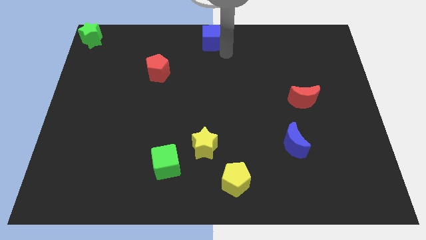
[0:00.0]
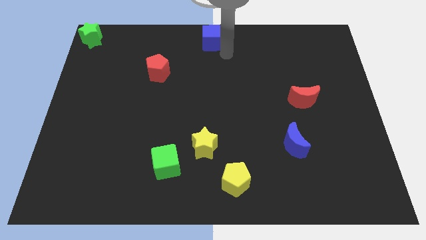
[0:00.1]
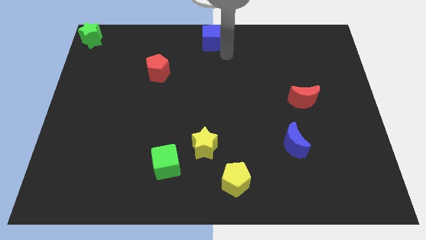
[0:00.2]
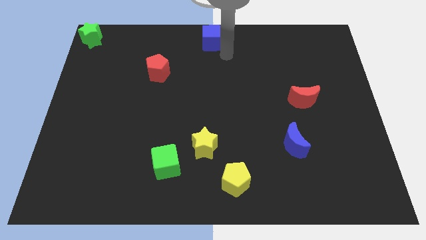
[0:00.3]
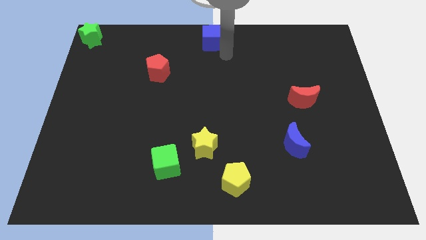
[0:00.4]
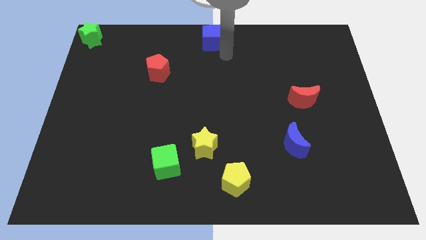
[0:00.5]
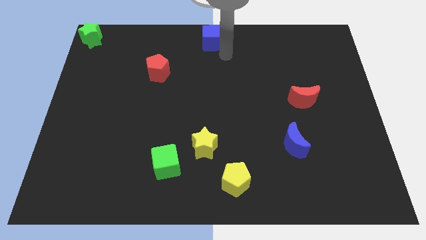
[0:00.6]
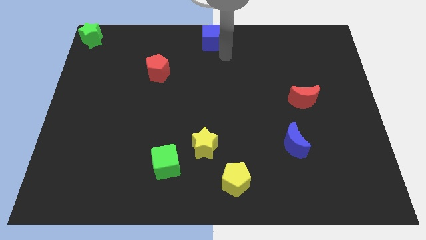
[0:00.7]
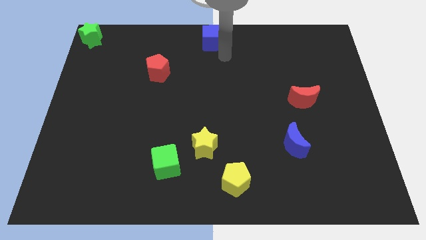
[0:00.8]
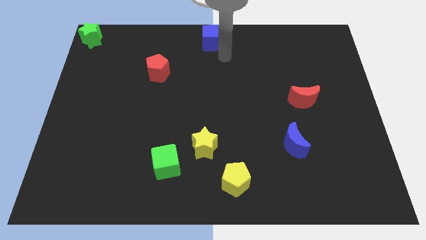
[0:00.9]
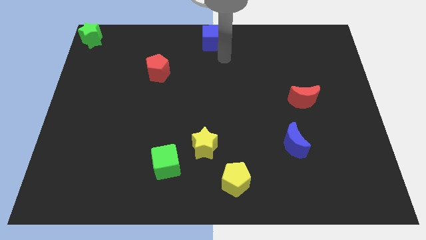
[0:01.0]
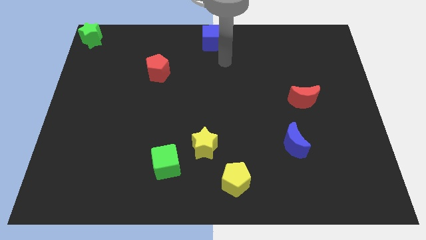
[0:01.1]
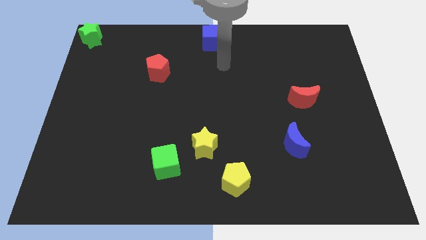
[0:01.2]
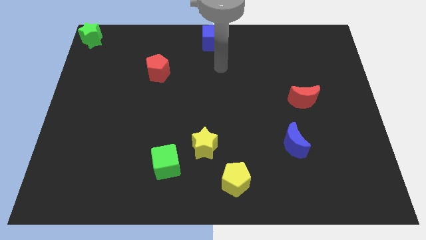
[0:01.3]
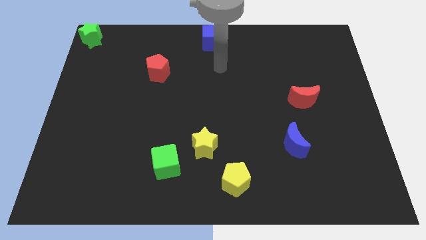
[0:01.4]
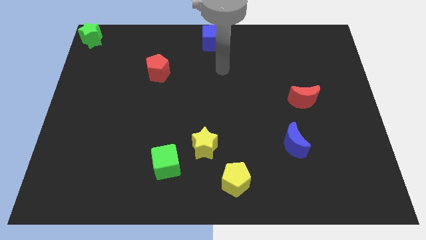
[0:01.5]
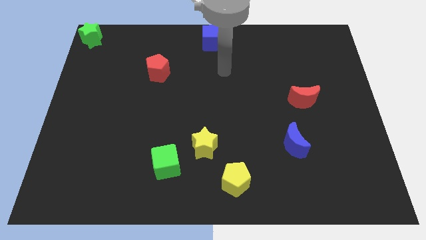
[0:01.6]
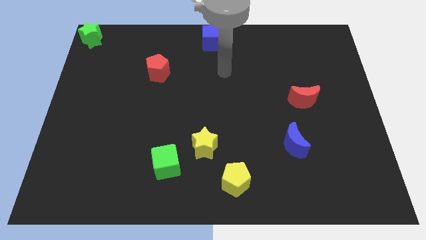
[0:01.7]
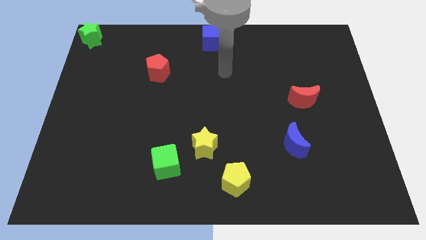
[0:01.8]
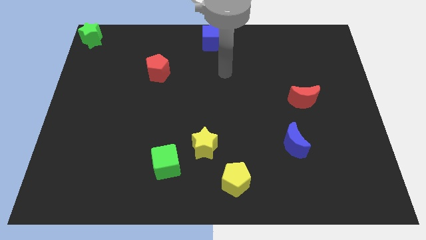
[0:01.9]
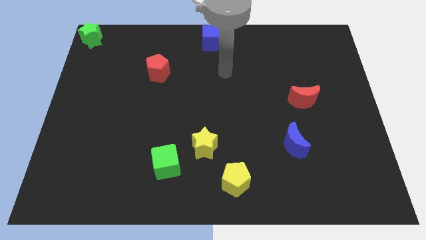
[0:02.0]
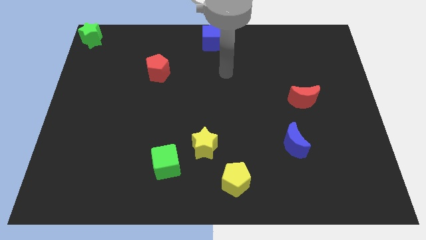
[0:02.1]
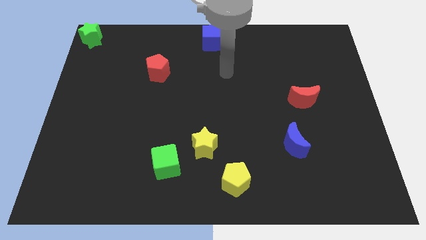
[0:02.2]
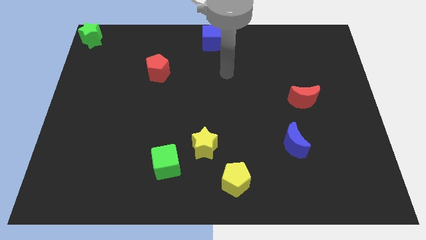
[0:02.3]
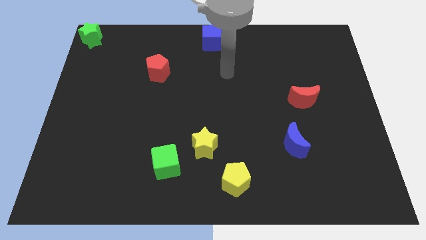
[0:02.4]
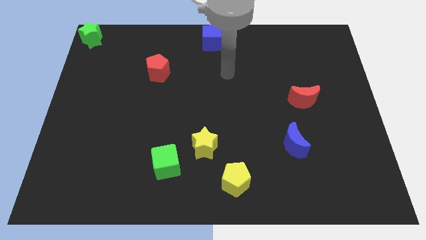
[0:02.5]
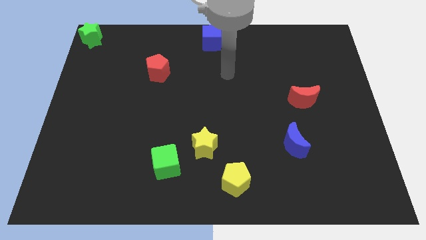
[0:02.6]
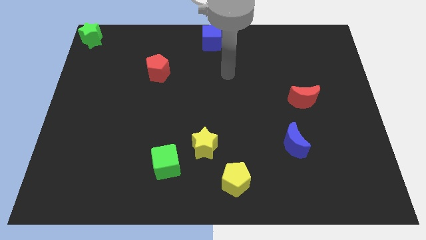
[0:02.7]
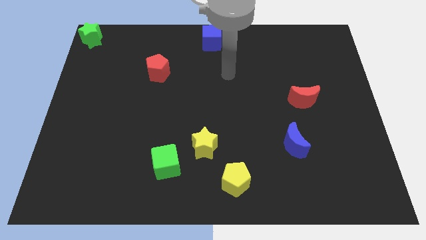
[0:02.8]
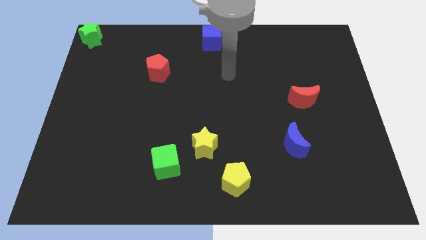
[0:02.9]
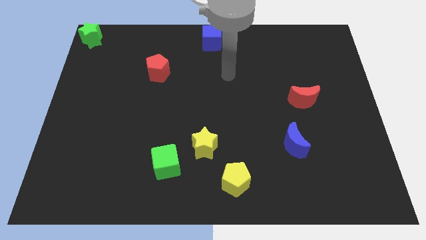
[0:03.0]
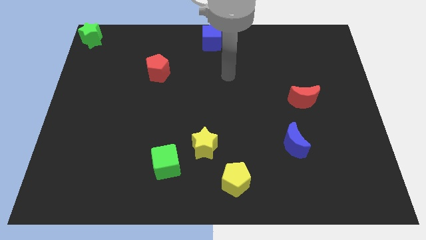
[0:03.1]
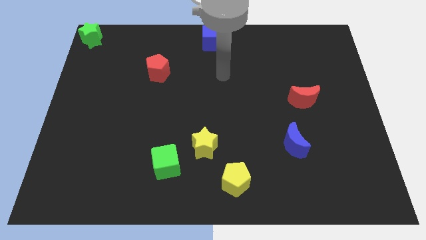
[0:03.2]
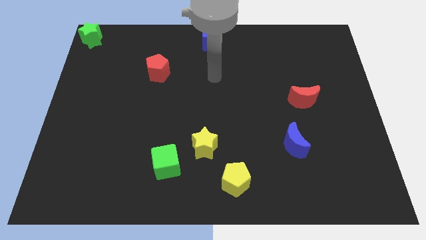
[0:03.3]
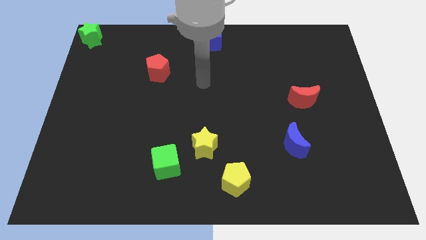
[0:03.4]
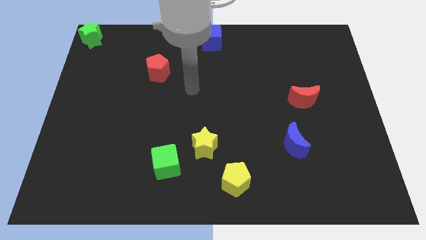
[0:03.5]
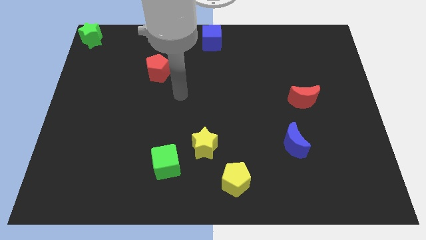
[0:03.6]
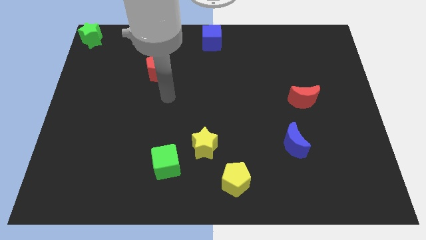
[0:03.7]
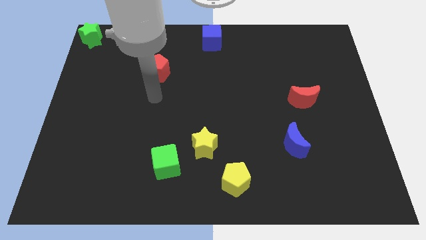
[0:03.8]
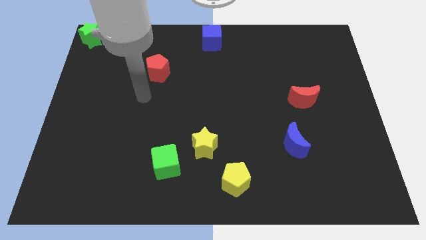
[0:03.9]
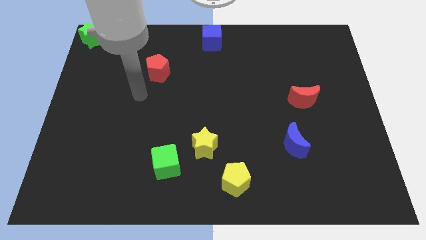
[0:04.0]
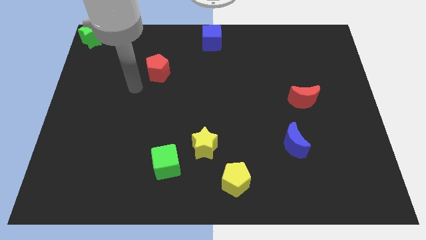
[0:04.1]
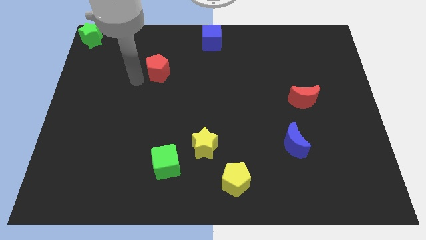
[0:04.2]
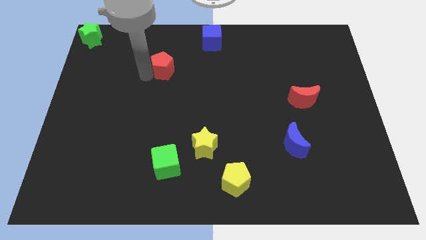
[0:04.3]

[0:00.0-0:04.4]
move the arm towards the red pentagon

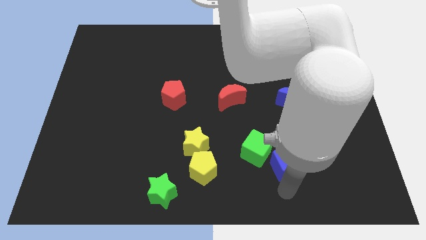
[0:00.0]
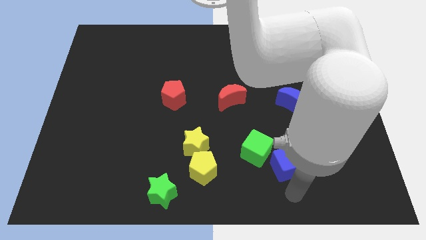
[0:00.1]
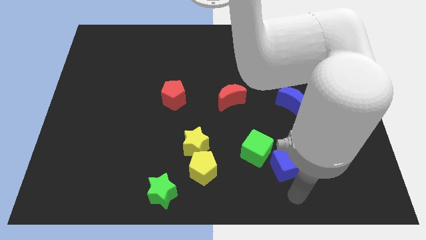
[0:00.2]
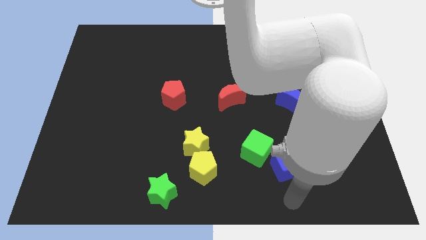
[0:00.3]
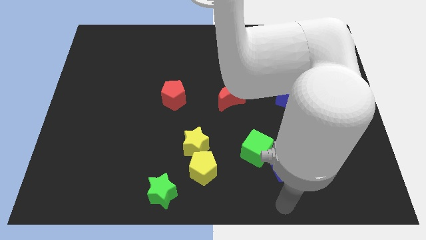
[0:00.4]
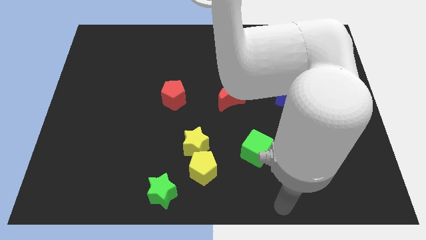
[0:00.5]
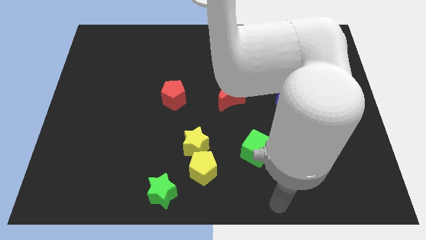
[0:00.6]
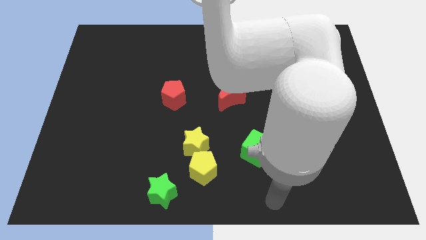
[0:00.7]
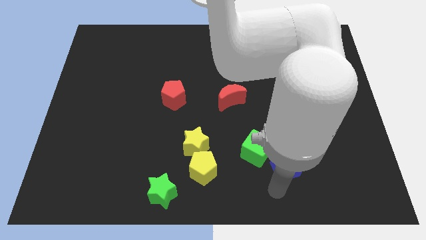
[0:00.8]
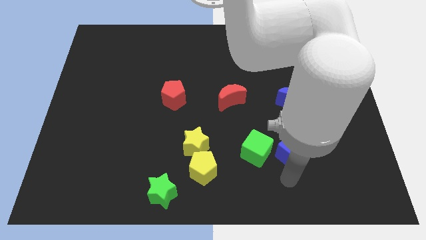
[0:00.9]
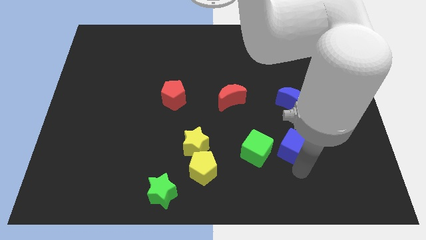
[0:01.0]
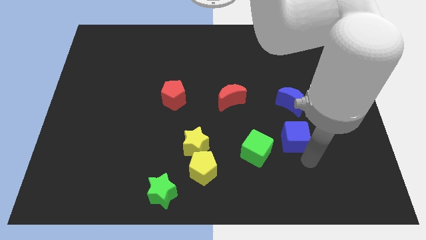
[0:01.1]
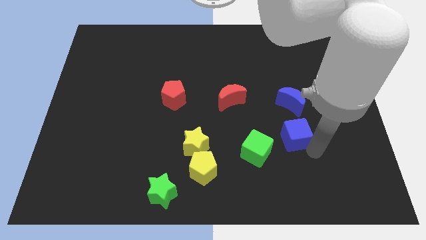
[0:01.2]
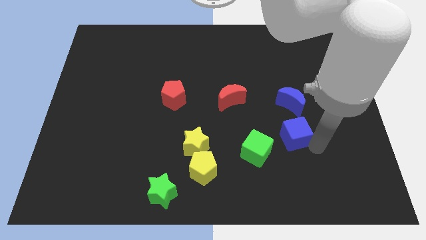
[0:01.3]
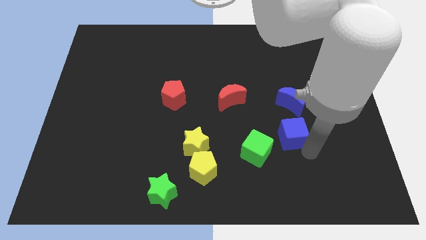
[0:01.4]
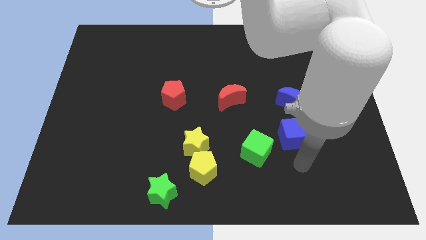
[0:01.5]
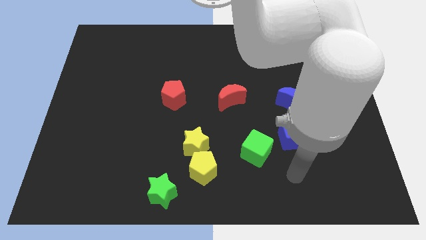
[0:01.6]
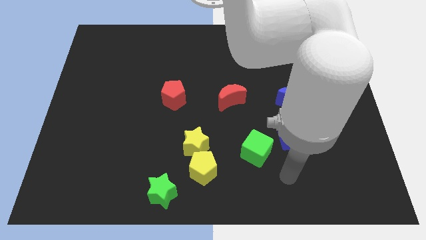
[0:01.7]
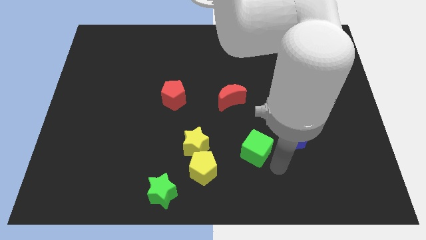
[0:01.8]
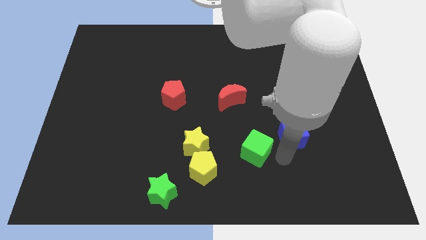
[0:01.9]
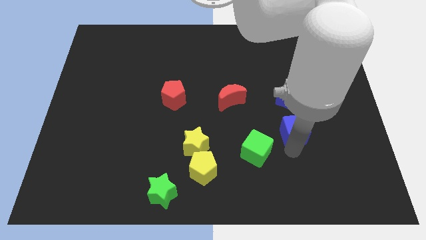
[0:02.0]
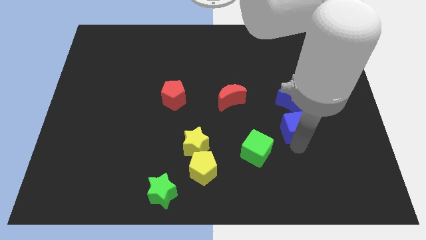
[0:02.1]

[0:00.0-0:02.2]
separate blue cube from green cube

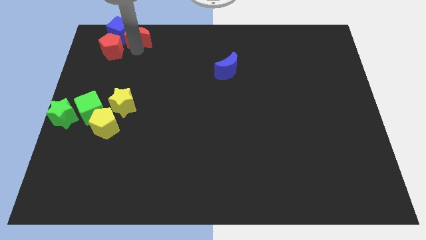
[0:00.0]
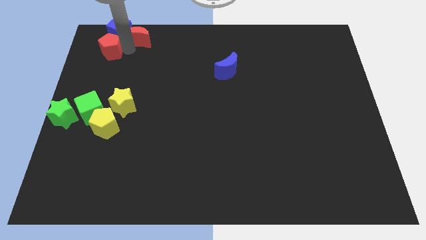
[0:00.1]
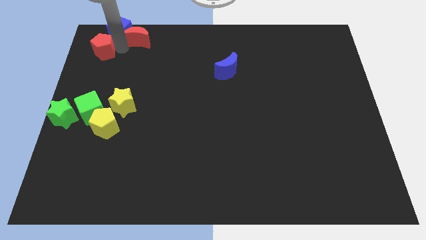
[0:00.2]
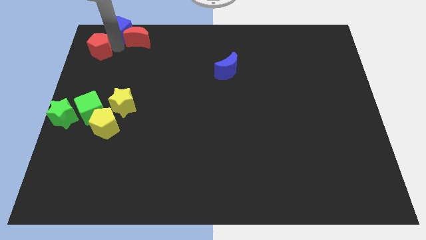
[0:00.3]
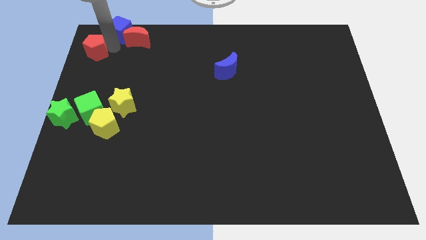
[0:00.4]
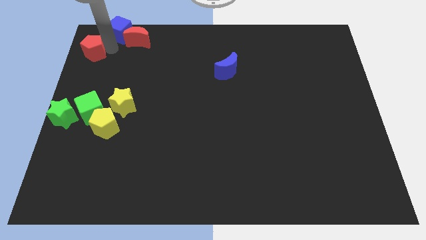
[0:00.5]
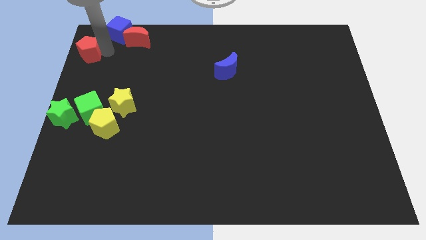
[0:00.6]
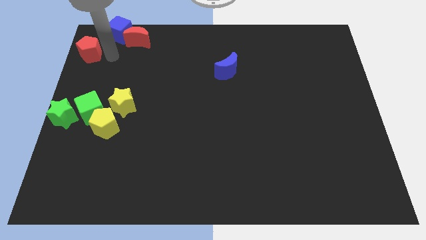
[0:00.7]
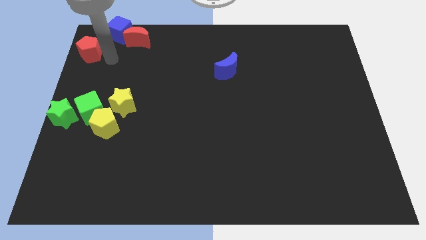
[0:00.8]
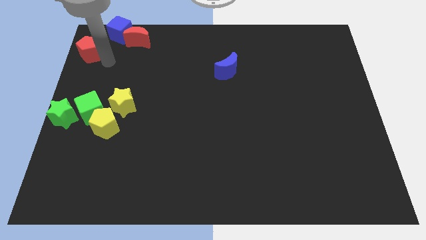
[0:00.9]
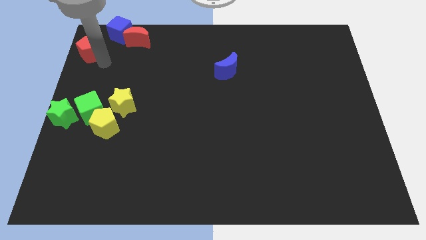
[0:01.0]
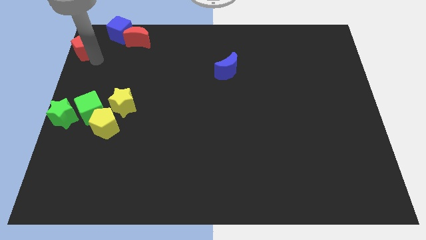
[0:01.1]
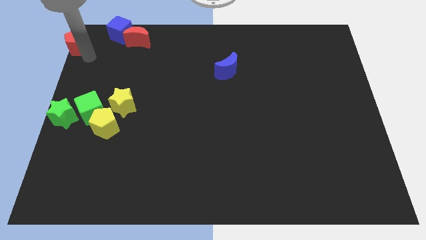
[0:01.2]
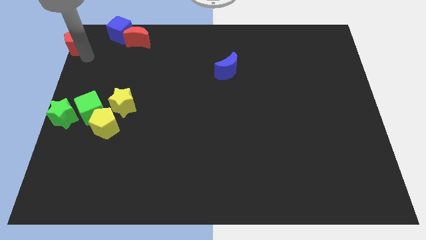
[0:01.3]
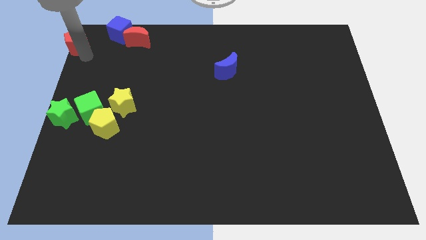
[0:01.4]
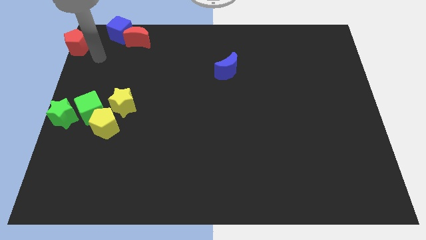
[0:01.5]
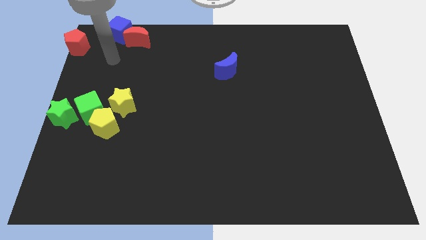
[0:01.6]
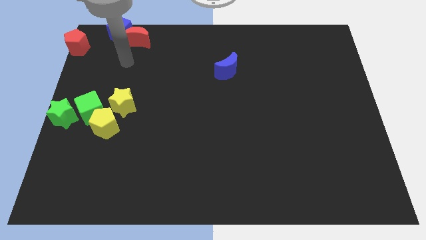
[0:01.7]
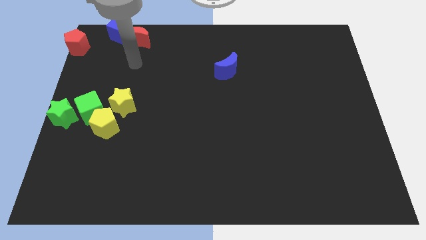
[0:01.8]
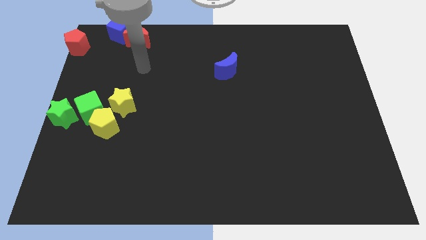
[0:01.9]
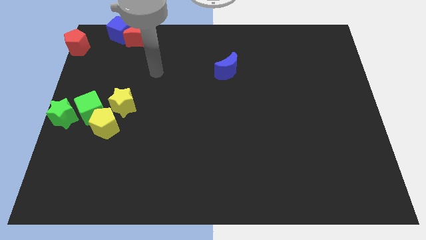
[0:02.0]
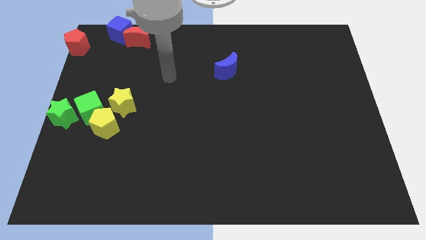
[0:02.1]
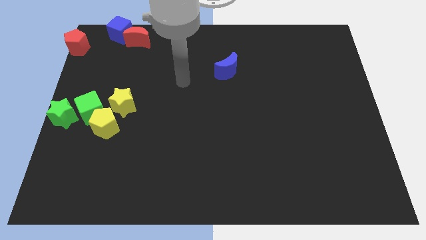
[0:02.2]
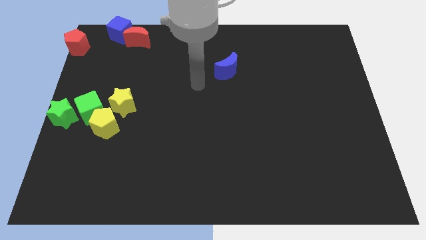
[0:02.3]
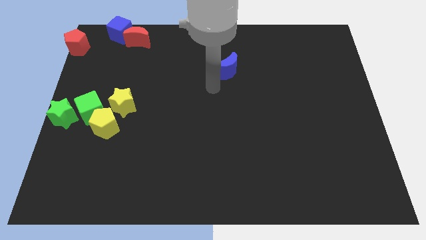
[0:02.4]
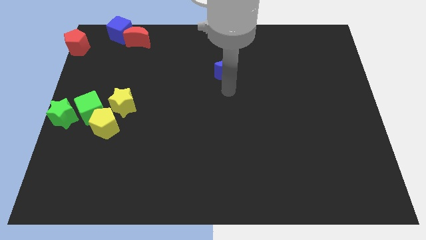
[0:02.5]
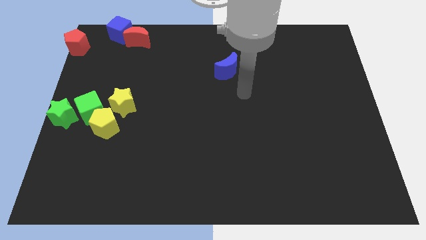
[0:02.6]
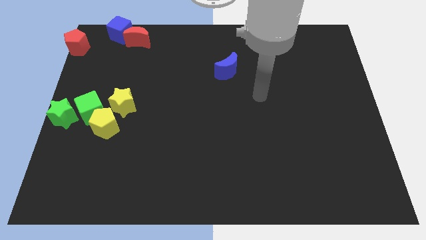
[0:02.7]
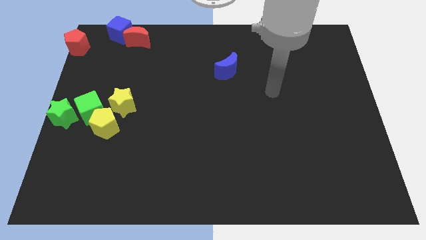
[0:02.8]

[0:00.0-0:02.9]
place the red pentagon at the top left
